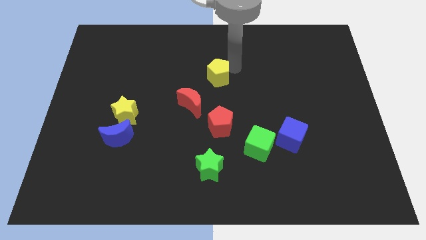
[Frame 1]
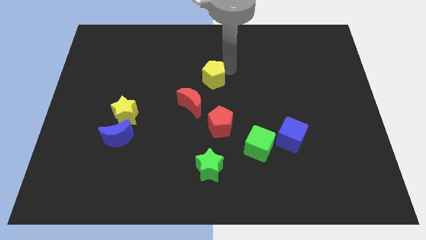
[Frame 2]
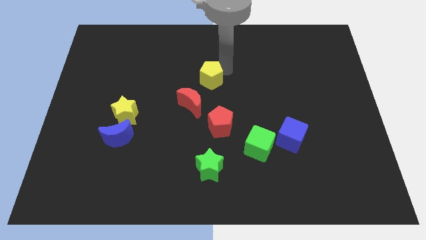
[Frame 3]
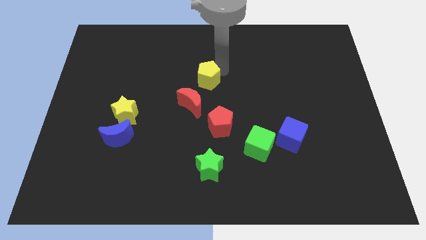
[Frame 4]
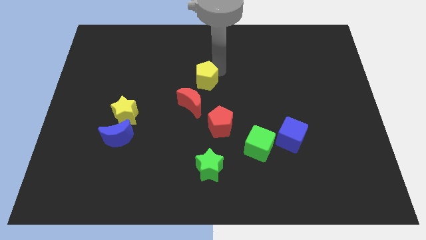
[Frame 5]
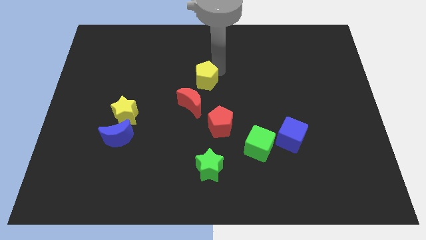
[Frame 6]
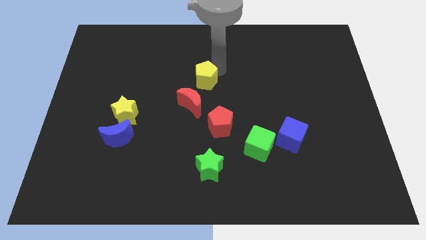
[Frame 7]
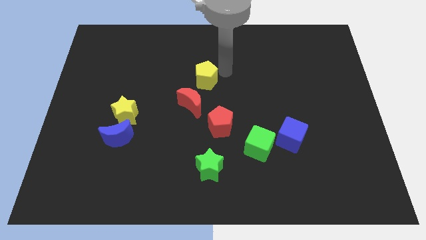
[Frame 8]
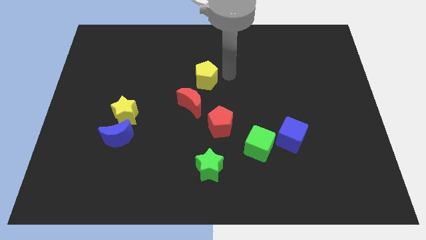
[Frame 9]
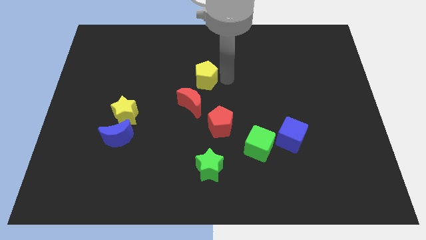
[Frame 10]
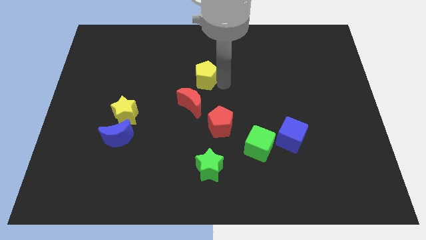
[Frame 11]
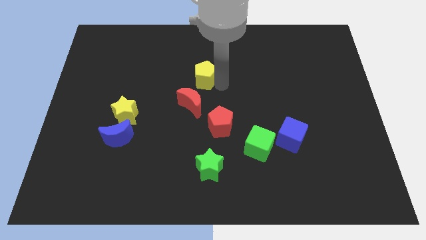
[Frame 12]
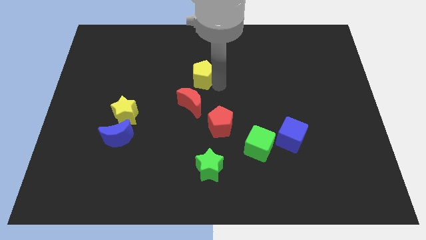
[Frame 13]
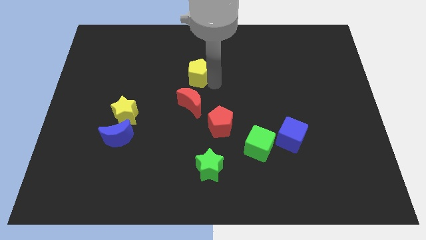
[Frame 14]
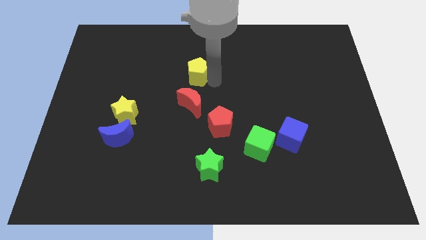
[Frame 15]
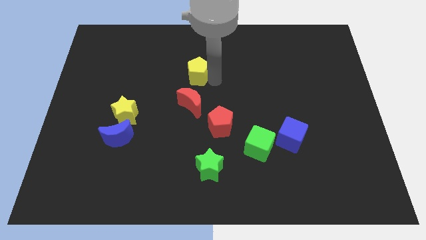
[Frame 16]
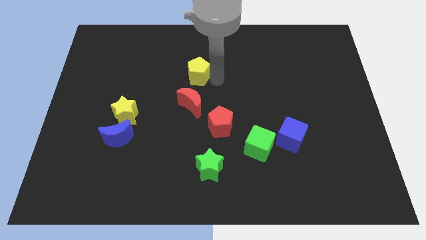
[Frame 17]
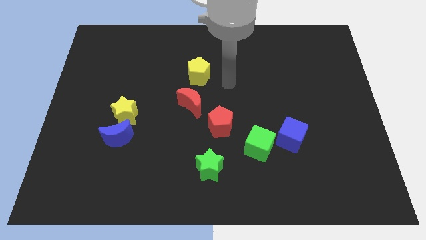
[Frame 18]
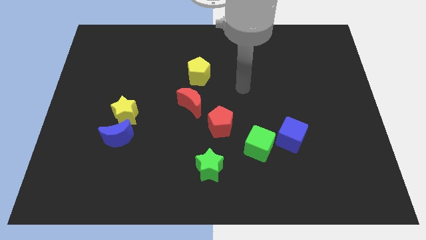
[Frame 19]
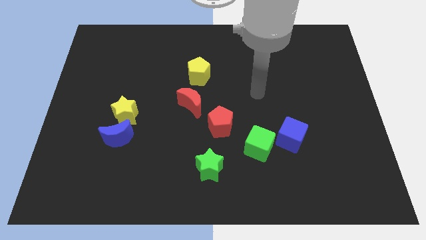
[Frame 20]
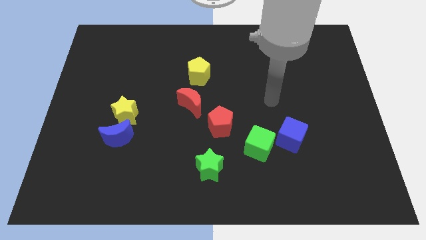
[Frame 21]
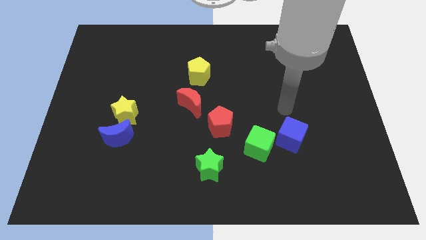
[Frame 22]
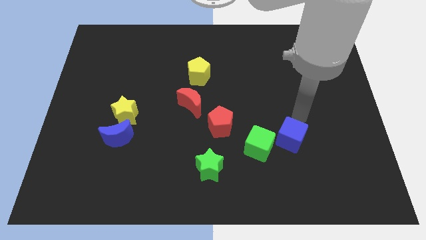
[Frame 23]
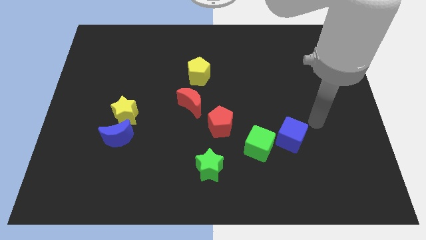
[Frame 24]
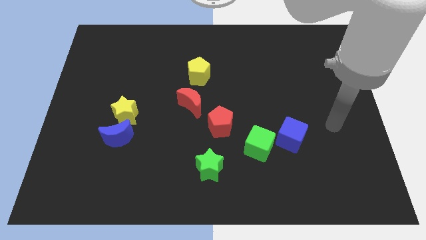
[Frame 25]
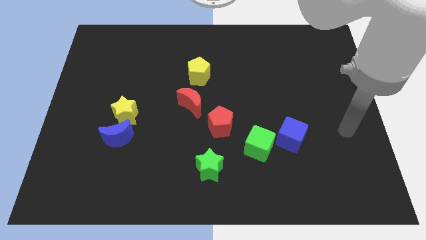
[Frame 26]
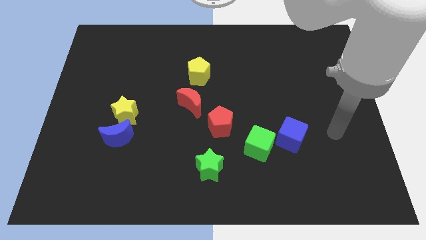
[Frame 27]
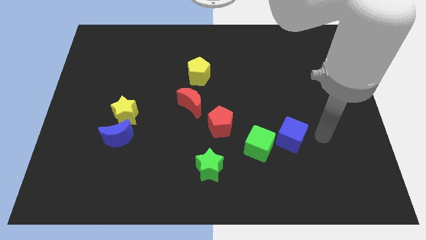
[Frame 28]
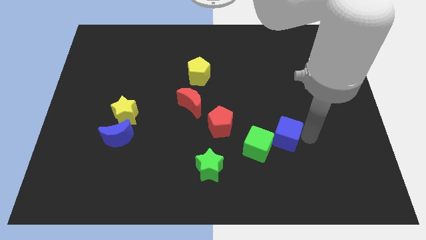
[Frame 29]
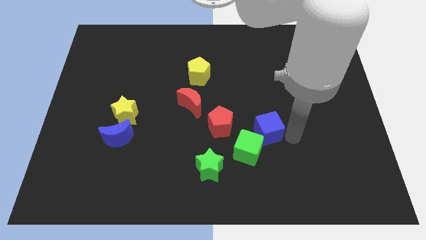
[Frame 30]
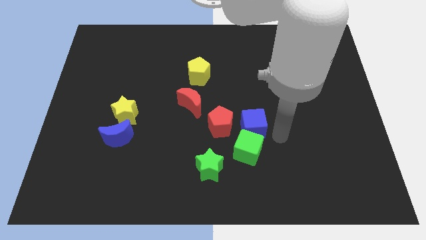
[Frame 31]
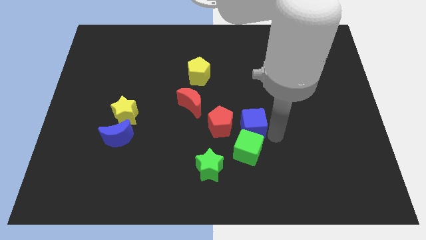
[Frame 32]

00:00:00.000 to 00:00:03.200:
slightly push the yellow pentagon to the top of red crescent

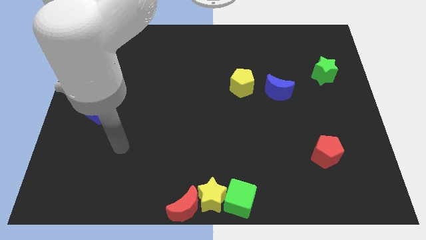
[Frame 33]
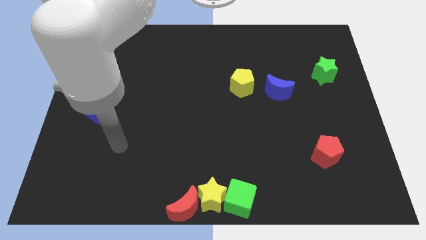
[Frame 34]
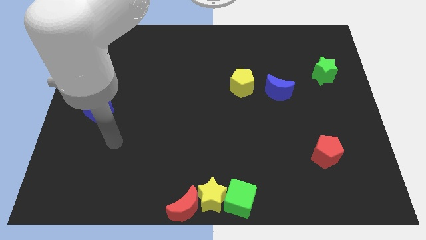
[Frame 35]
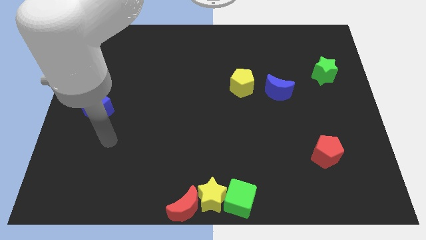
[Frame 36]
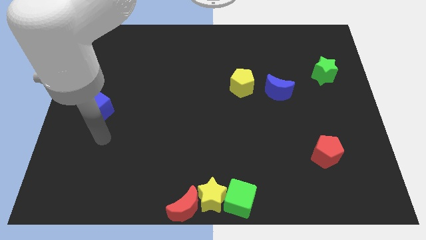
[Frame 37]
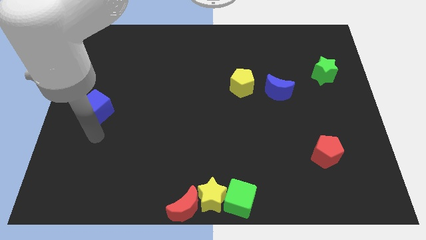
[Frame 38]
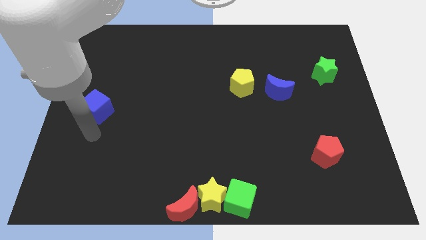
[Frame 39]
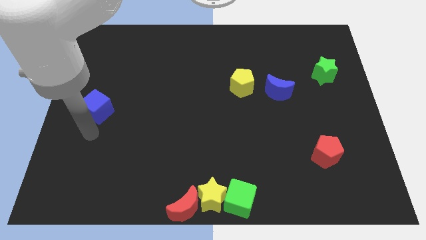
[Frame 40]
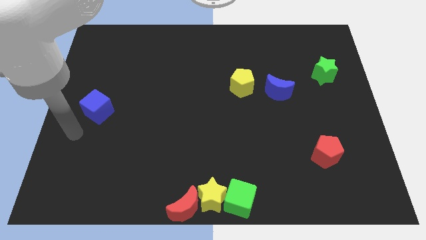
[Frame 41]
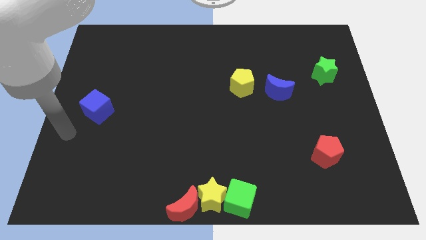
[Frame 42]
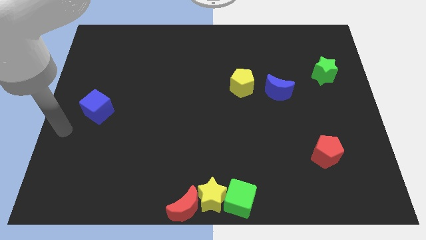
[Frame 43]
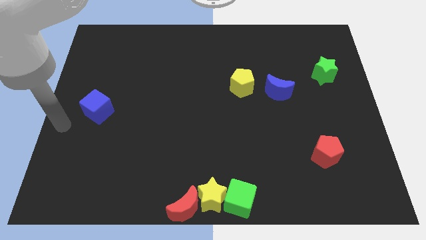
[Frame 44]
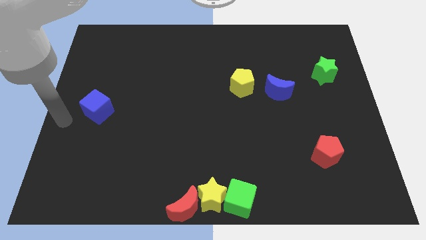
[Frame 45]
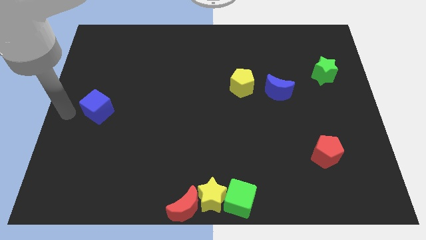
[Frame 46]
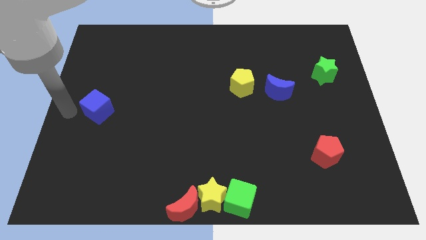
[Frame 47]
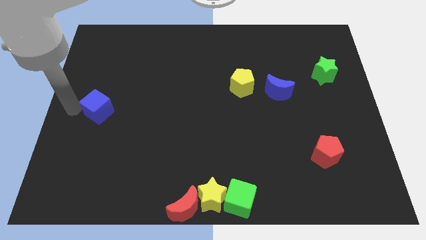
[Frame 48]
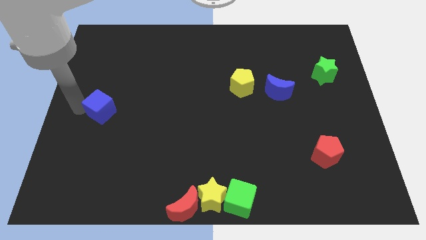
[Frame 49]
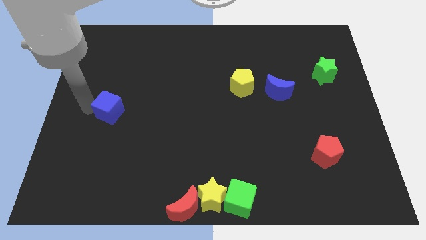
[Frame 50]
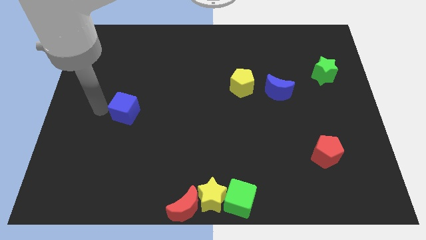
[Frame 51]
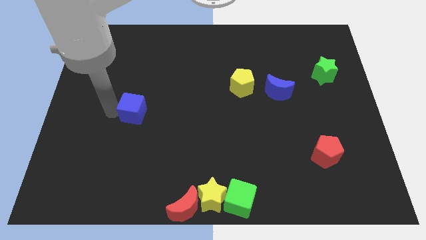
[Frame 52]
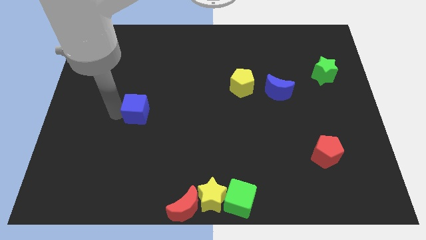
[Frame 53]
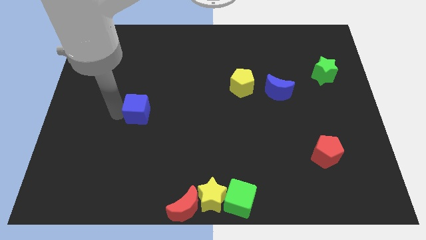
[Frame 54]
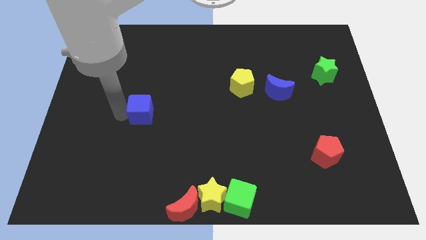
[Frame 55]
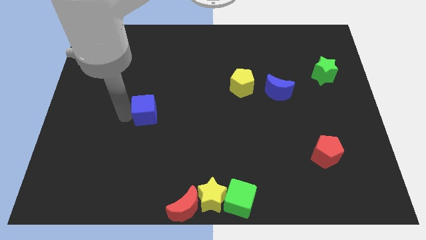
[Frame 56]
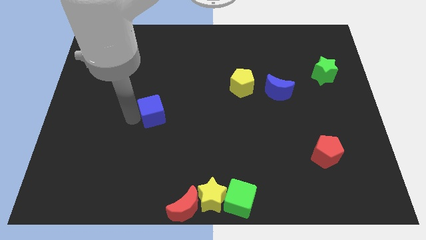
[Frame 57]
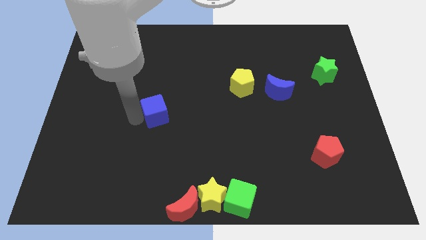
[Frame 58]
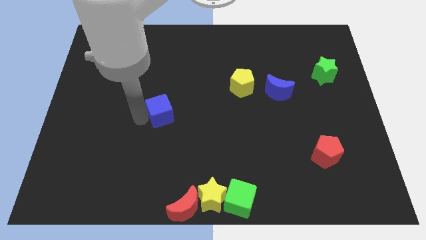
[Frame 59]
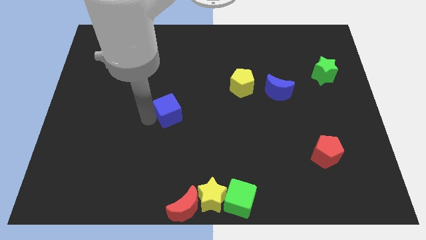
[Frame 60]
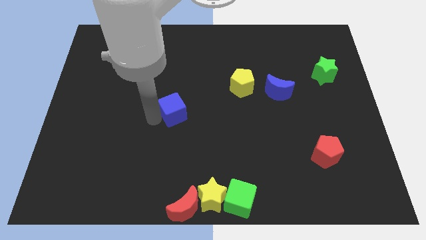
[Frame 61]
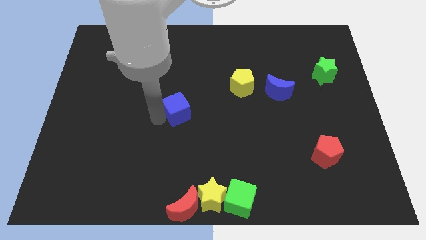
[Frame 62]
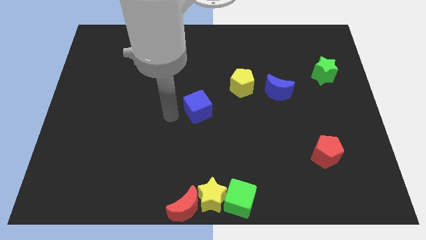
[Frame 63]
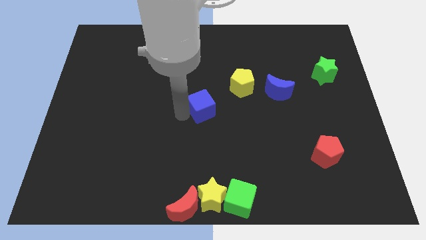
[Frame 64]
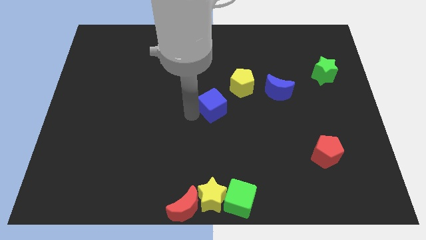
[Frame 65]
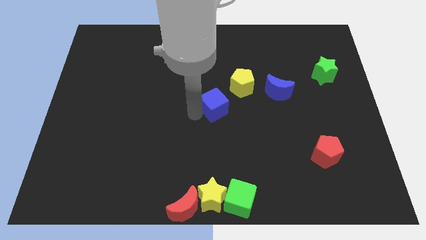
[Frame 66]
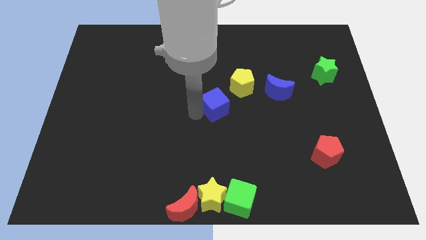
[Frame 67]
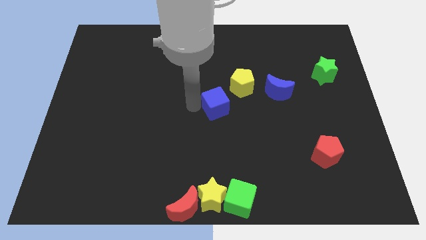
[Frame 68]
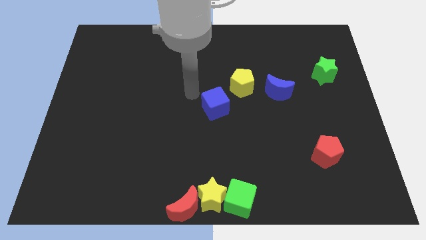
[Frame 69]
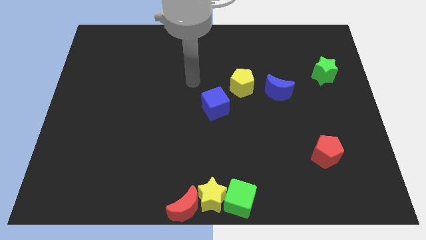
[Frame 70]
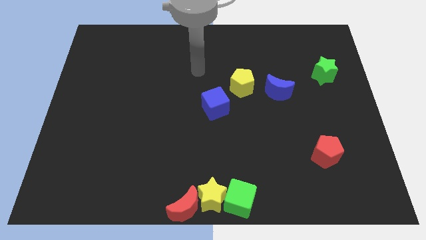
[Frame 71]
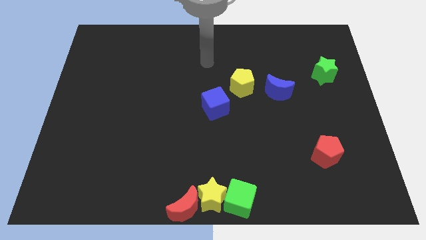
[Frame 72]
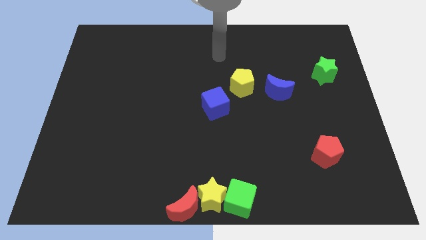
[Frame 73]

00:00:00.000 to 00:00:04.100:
push the blue cube to the center of board

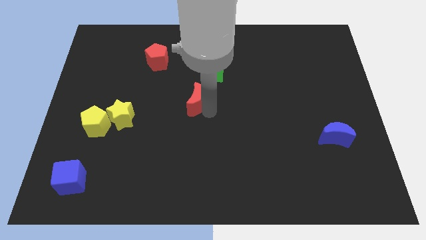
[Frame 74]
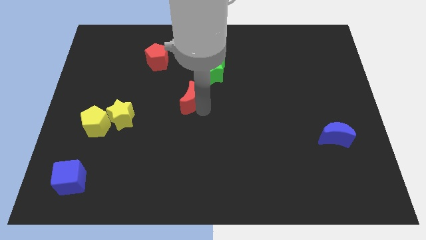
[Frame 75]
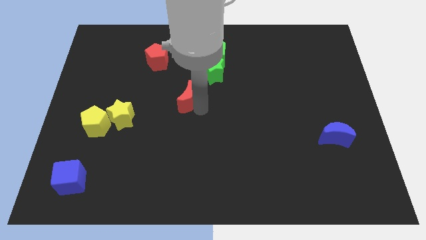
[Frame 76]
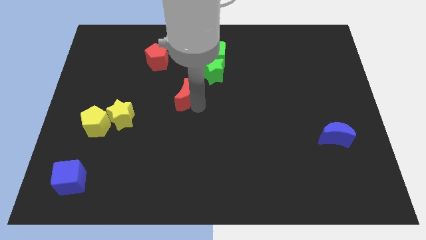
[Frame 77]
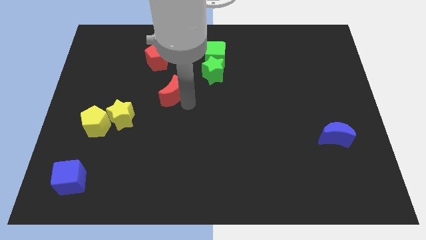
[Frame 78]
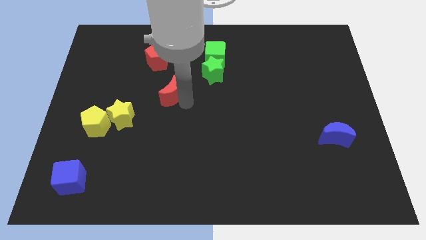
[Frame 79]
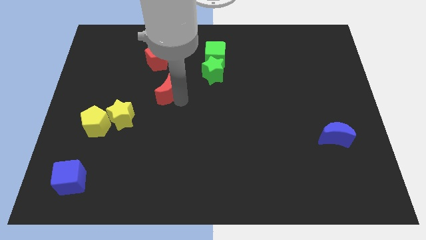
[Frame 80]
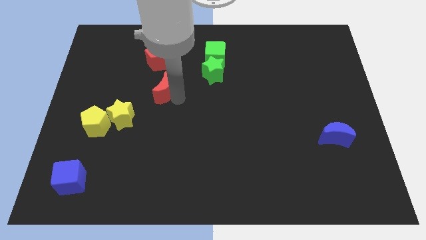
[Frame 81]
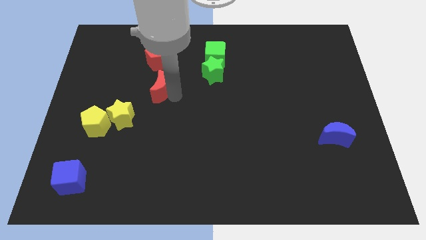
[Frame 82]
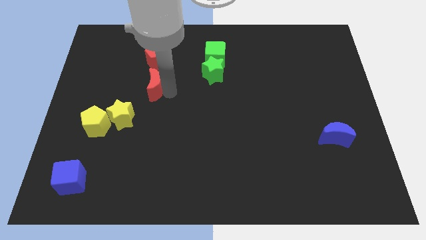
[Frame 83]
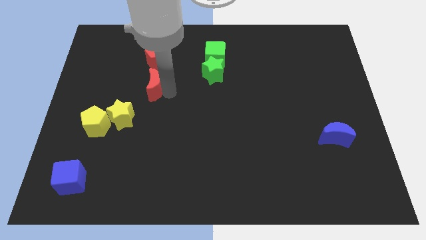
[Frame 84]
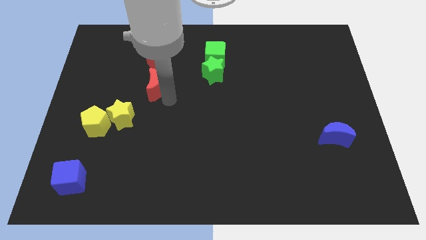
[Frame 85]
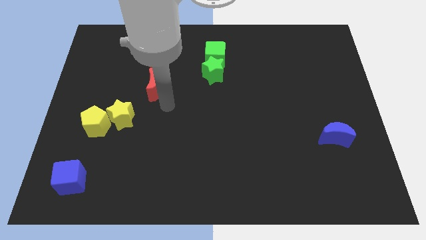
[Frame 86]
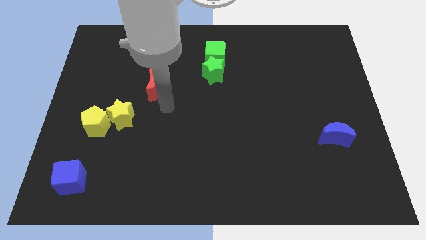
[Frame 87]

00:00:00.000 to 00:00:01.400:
place the red crescent to the bottom of red pentagon

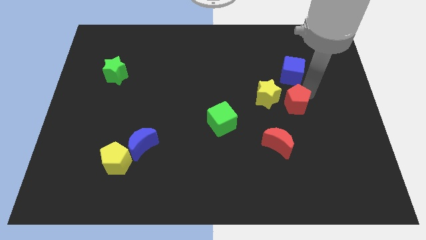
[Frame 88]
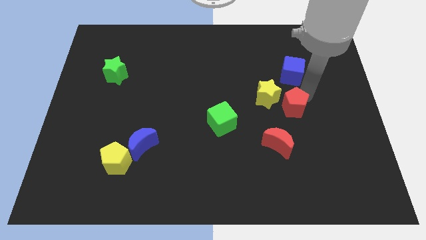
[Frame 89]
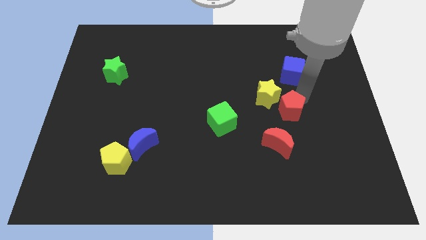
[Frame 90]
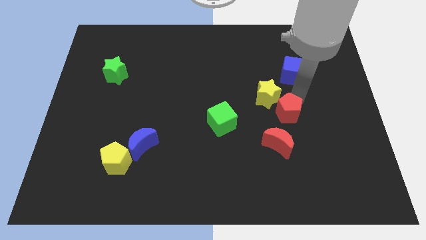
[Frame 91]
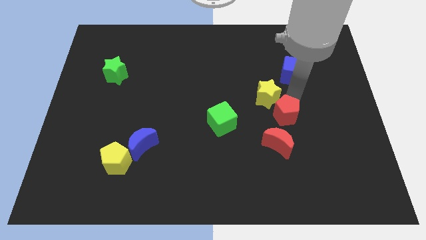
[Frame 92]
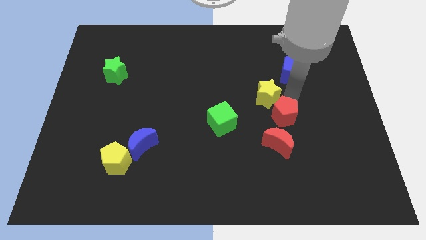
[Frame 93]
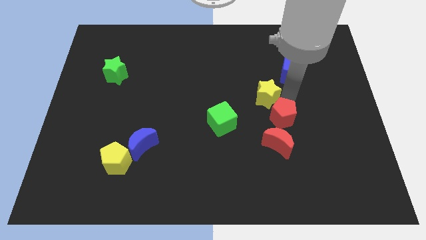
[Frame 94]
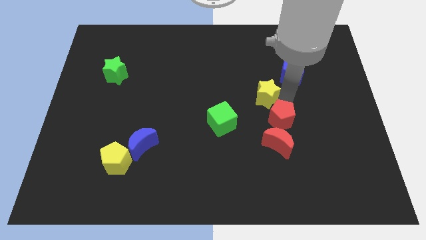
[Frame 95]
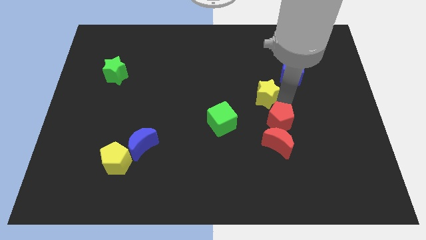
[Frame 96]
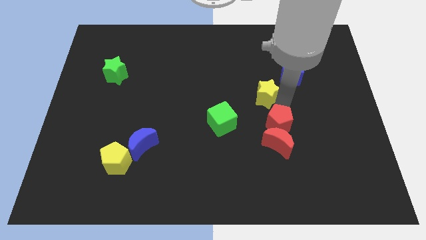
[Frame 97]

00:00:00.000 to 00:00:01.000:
slightly push the red pentagon towards red crescent
